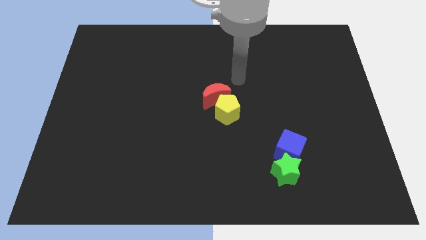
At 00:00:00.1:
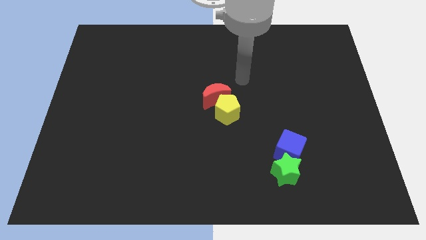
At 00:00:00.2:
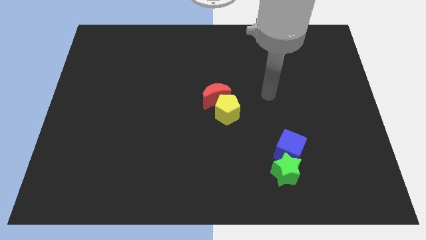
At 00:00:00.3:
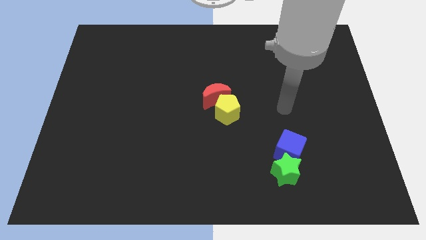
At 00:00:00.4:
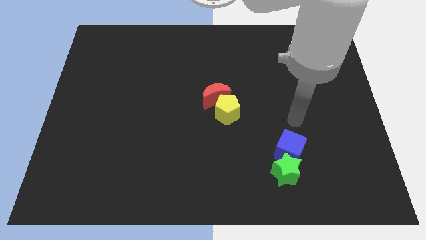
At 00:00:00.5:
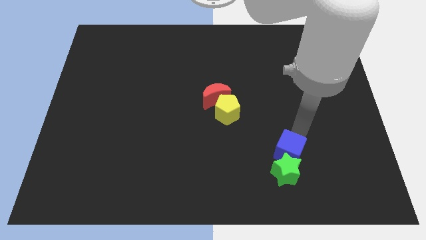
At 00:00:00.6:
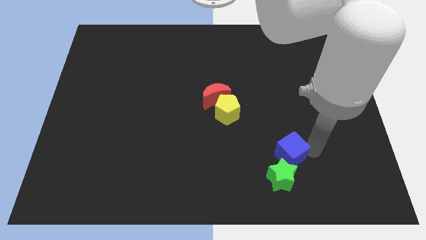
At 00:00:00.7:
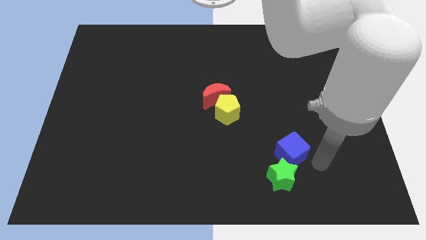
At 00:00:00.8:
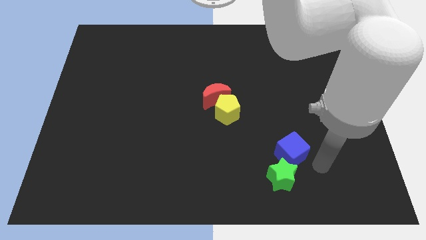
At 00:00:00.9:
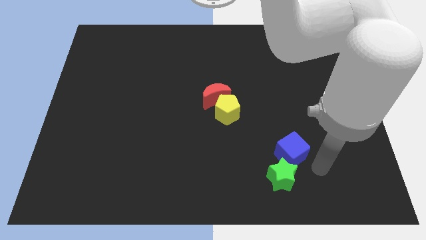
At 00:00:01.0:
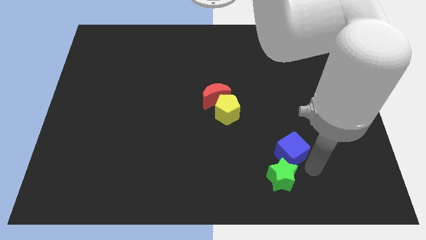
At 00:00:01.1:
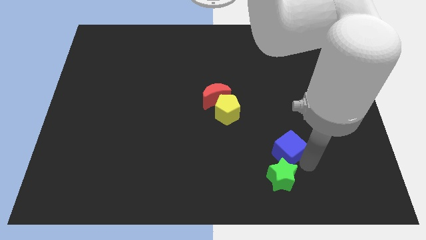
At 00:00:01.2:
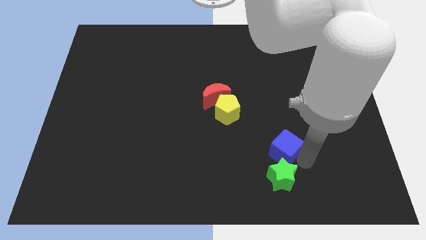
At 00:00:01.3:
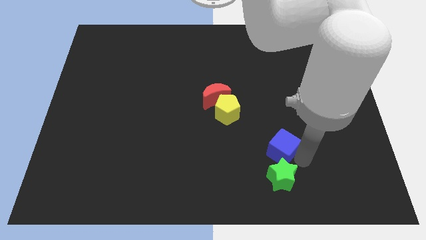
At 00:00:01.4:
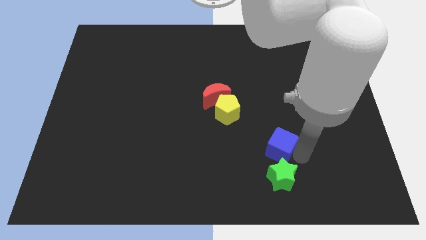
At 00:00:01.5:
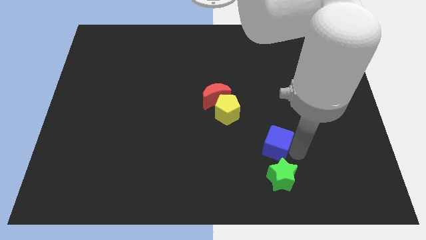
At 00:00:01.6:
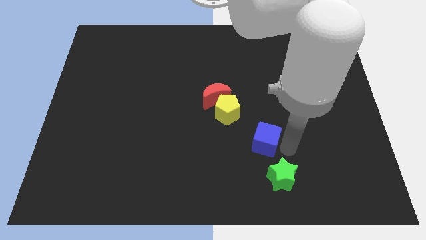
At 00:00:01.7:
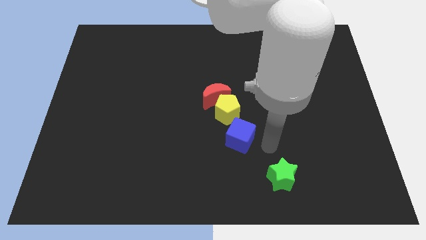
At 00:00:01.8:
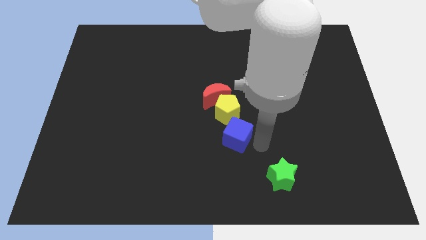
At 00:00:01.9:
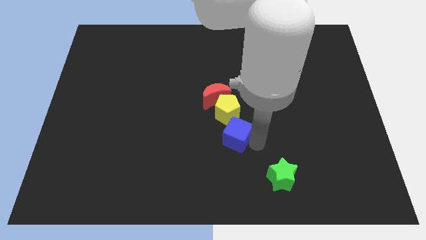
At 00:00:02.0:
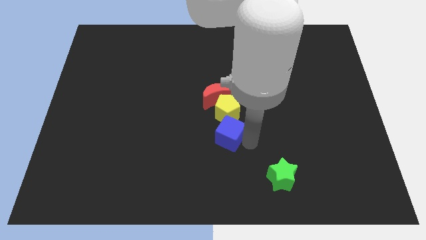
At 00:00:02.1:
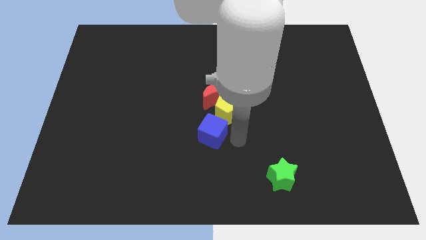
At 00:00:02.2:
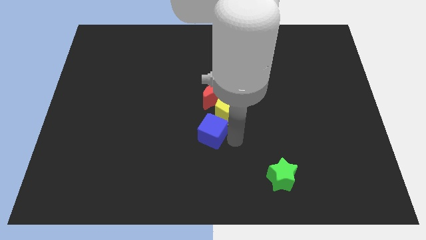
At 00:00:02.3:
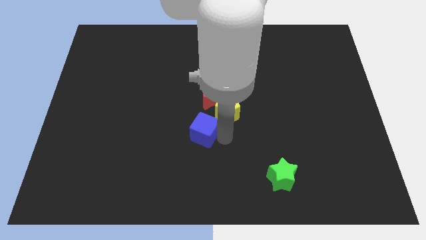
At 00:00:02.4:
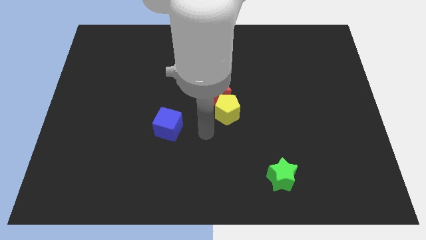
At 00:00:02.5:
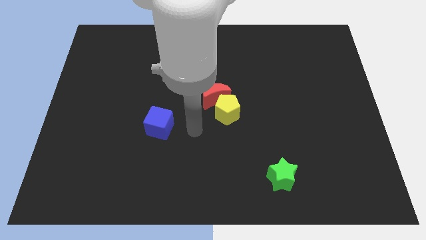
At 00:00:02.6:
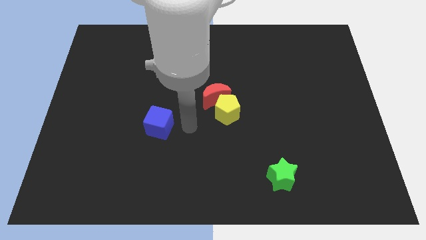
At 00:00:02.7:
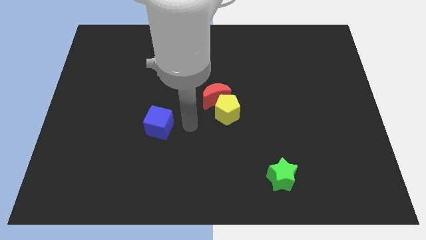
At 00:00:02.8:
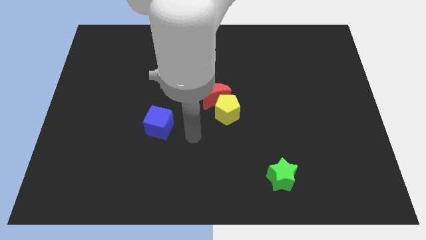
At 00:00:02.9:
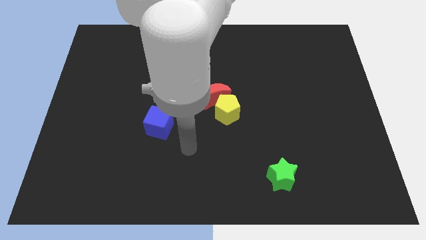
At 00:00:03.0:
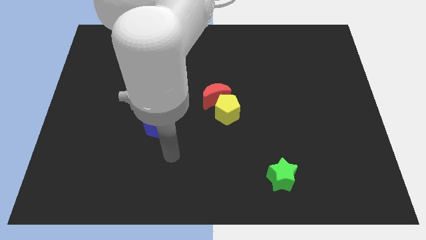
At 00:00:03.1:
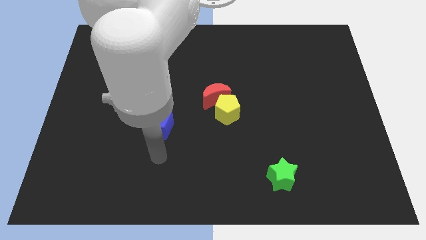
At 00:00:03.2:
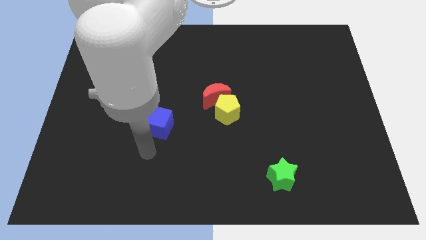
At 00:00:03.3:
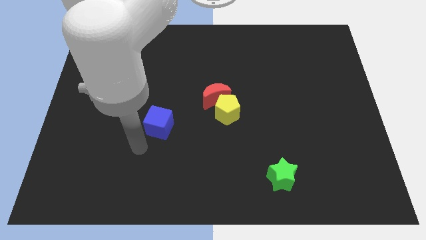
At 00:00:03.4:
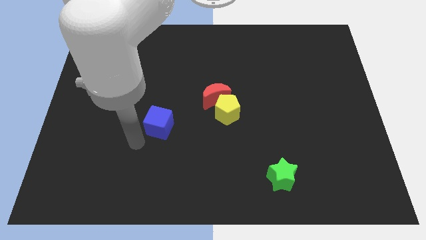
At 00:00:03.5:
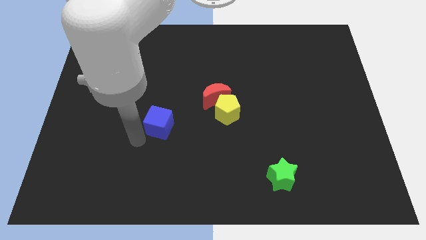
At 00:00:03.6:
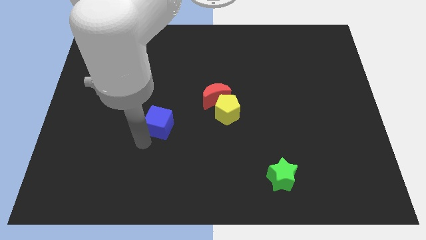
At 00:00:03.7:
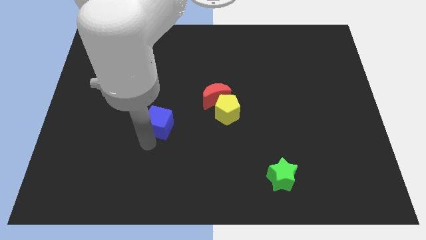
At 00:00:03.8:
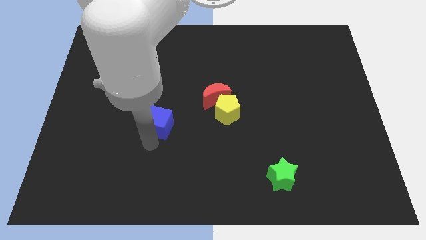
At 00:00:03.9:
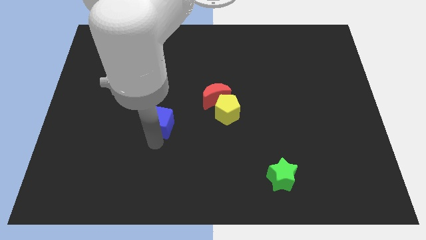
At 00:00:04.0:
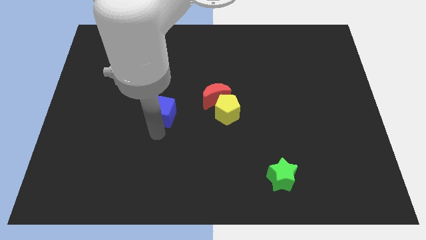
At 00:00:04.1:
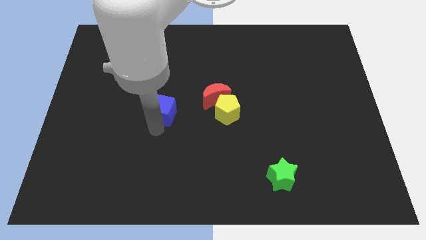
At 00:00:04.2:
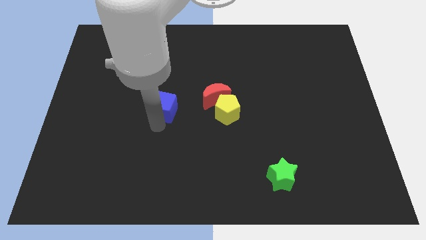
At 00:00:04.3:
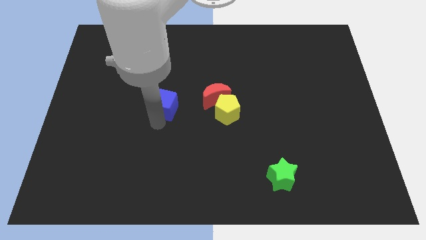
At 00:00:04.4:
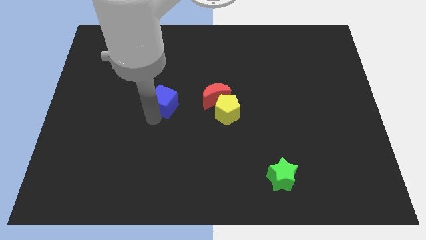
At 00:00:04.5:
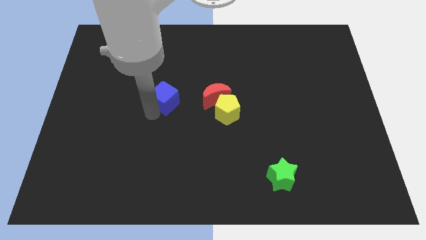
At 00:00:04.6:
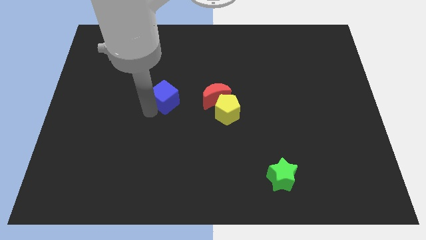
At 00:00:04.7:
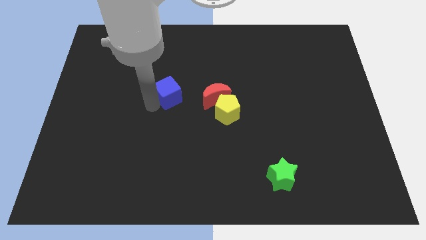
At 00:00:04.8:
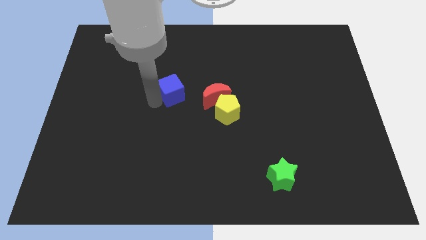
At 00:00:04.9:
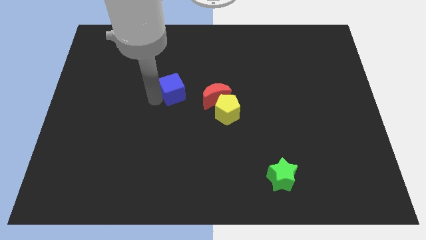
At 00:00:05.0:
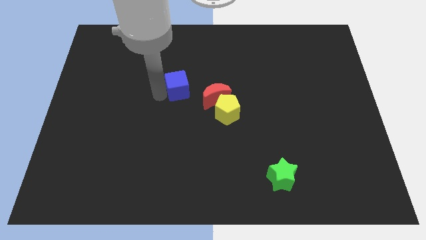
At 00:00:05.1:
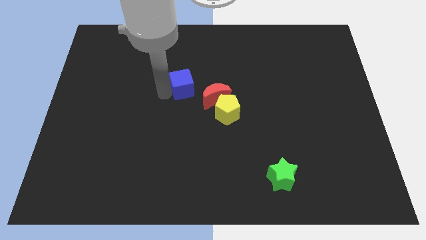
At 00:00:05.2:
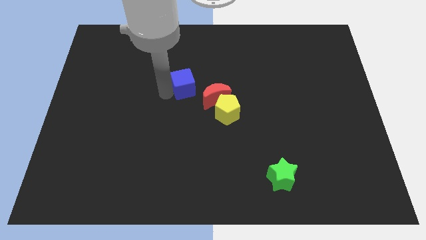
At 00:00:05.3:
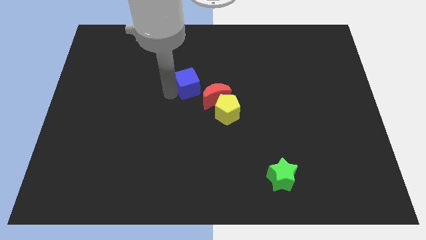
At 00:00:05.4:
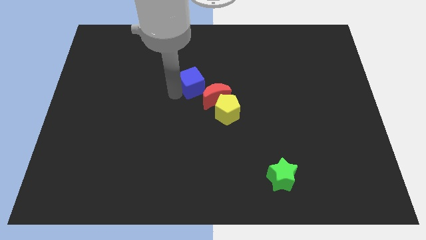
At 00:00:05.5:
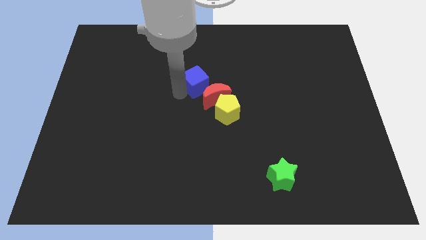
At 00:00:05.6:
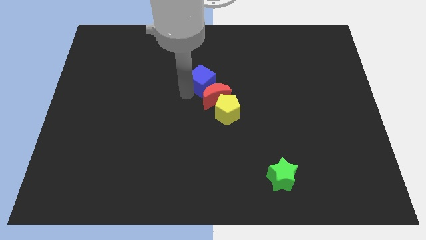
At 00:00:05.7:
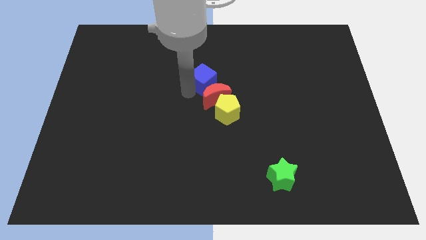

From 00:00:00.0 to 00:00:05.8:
put the blue cube close to the moon

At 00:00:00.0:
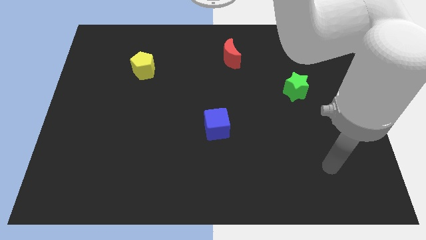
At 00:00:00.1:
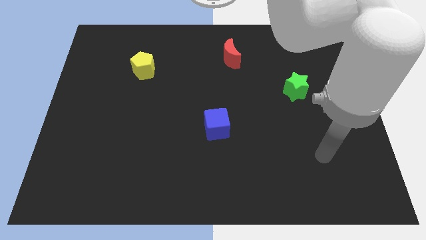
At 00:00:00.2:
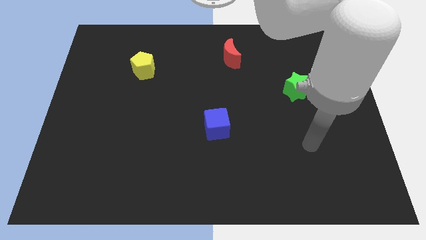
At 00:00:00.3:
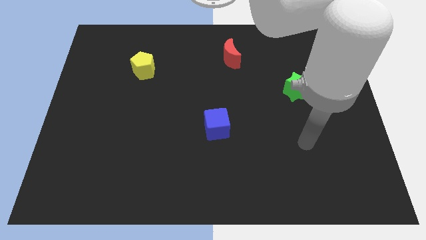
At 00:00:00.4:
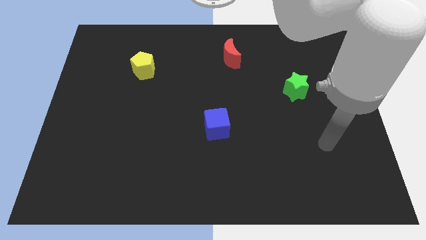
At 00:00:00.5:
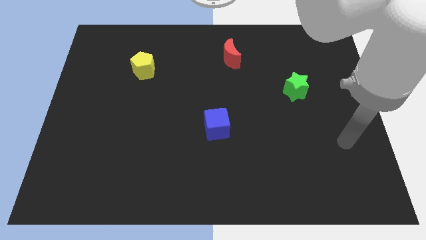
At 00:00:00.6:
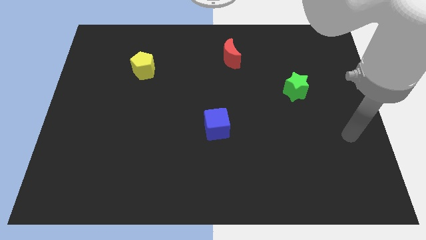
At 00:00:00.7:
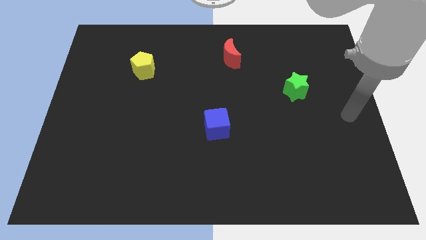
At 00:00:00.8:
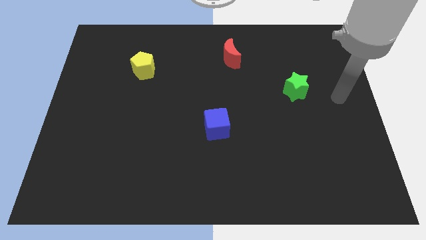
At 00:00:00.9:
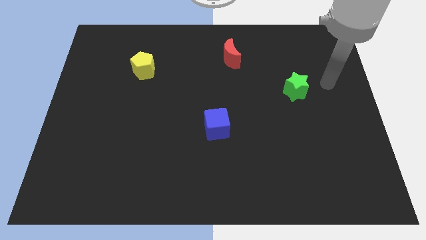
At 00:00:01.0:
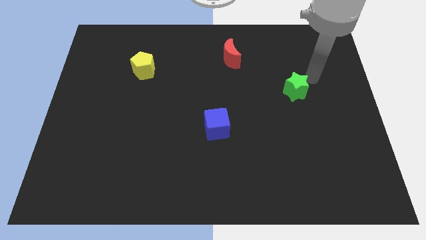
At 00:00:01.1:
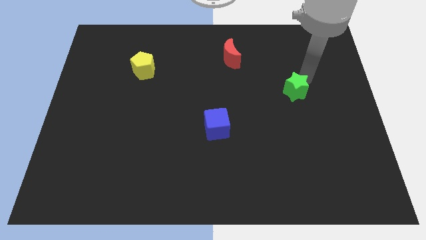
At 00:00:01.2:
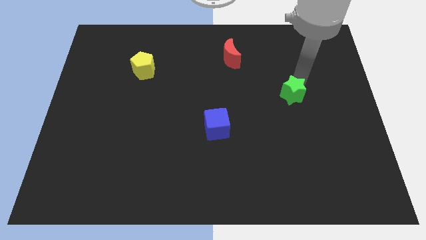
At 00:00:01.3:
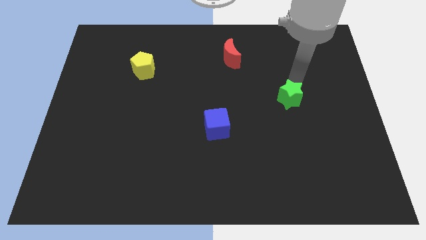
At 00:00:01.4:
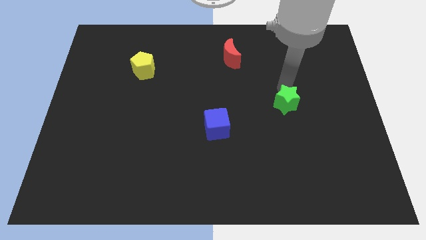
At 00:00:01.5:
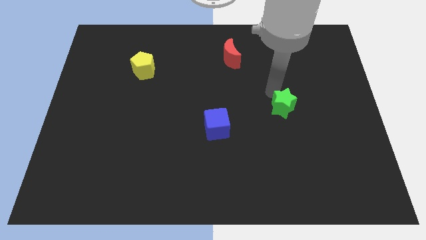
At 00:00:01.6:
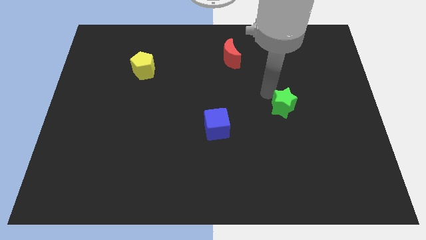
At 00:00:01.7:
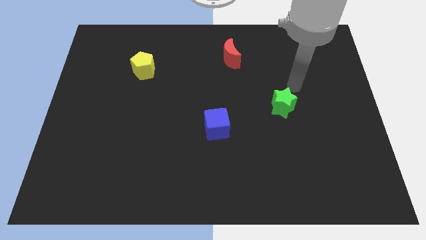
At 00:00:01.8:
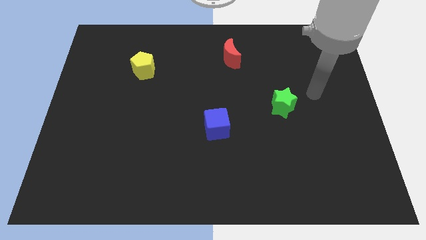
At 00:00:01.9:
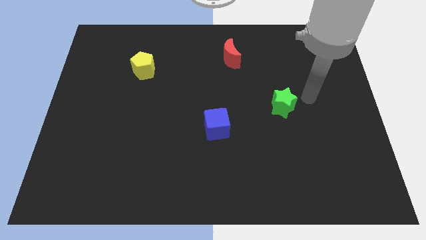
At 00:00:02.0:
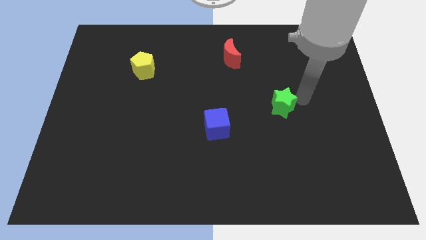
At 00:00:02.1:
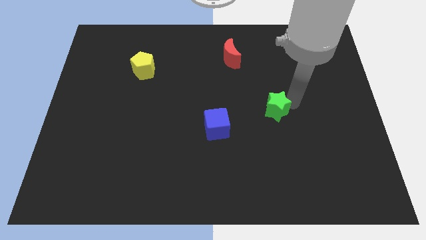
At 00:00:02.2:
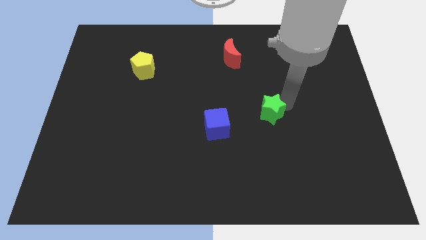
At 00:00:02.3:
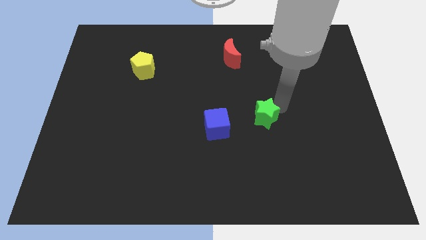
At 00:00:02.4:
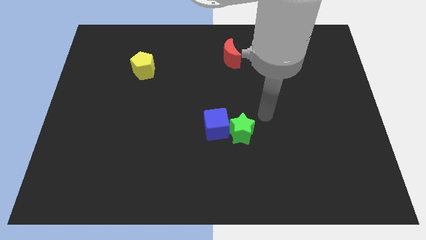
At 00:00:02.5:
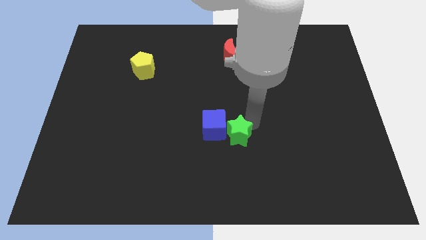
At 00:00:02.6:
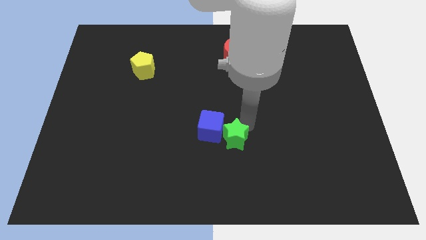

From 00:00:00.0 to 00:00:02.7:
slide the green star next to the blue block
